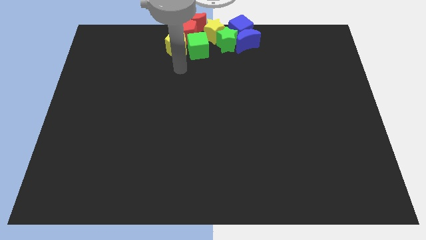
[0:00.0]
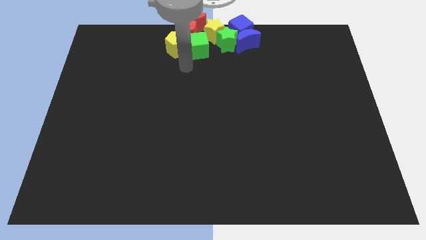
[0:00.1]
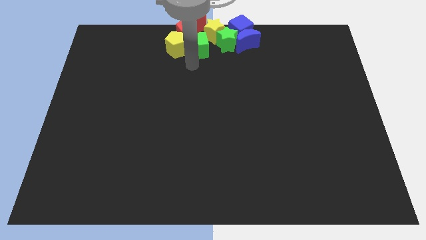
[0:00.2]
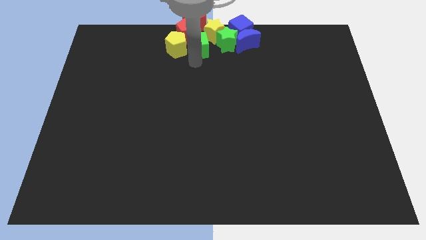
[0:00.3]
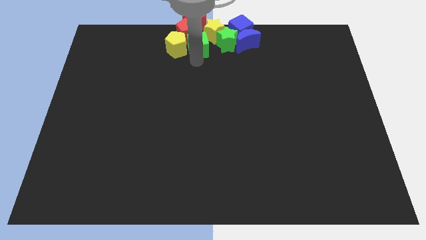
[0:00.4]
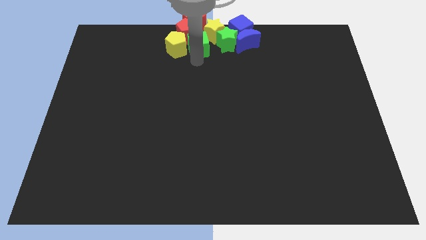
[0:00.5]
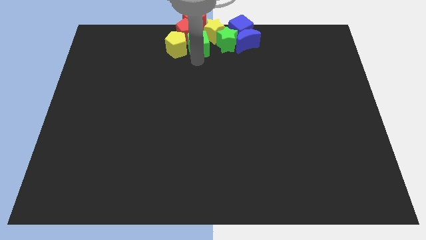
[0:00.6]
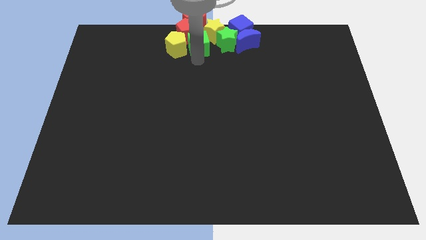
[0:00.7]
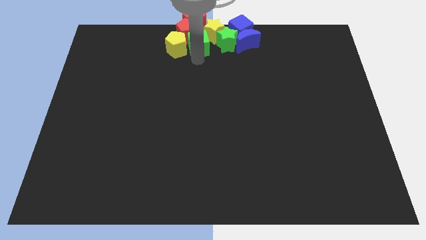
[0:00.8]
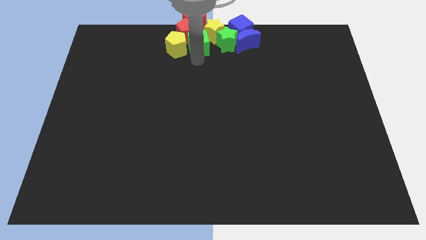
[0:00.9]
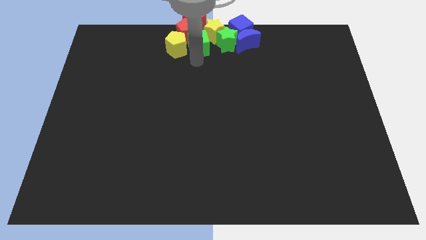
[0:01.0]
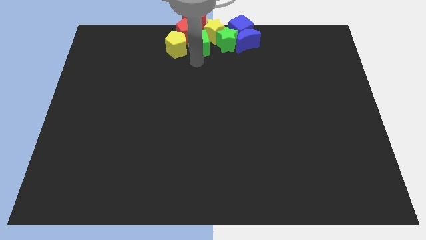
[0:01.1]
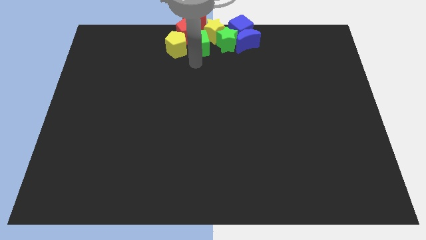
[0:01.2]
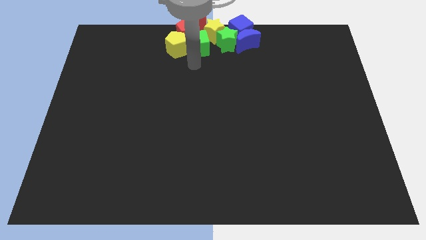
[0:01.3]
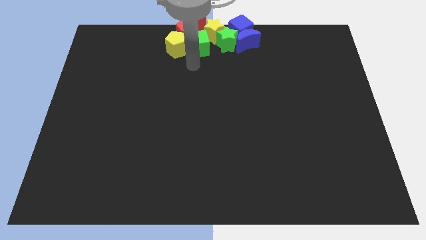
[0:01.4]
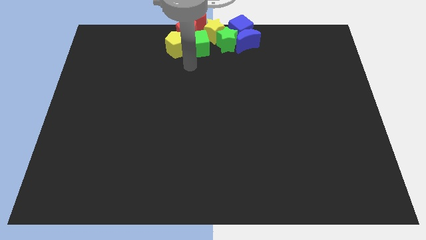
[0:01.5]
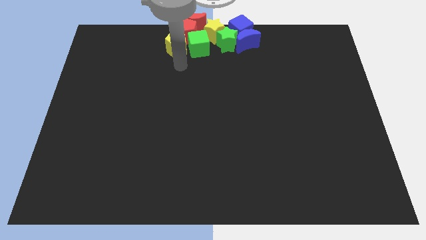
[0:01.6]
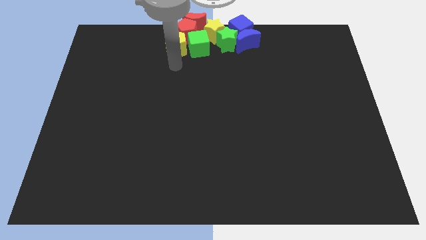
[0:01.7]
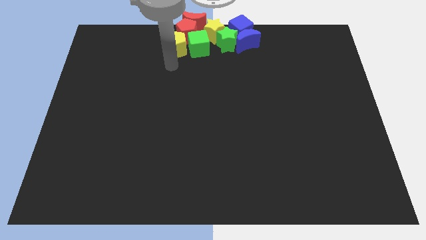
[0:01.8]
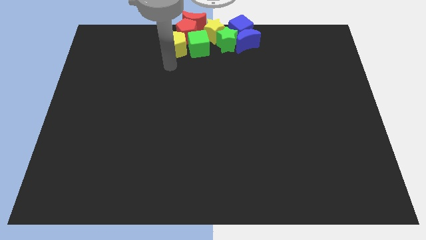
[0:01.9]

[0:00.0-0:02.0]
slide the green cube slightly up

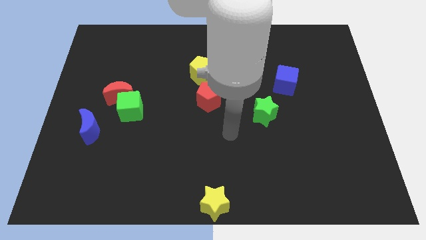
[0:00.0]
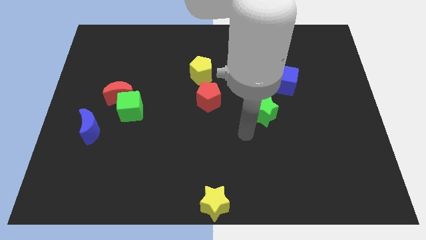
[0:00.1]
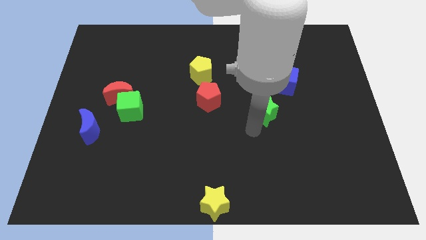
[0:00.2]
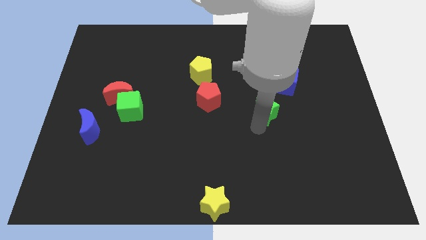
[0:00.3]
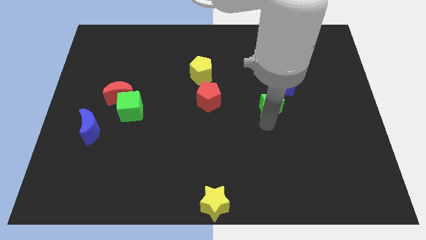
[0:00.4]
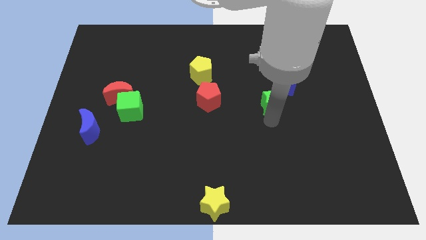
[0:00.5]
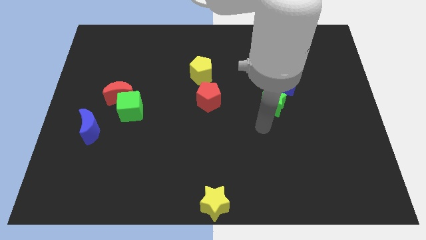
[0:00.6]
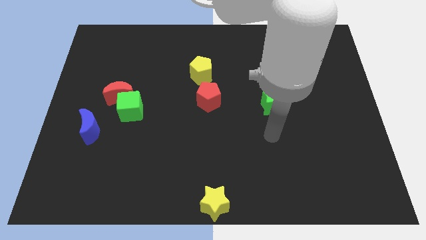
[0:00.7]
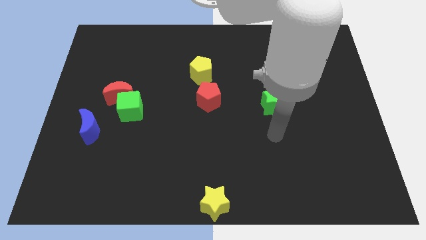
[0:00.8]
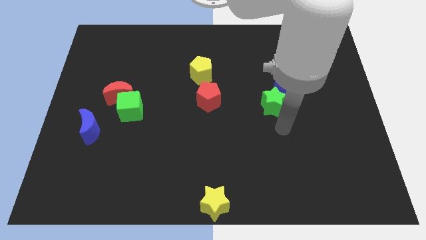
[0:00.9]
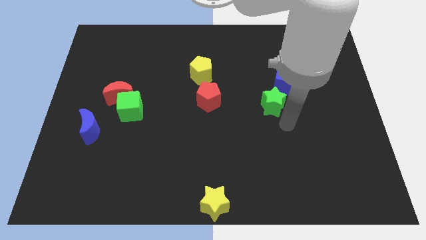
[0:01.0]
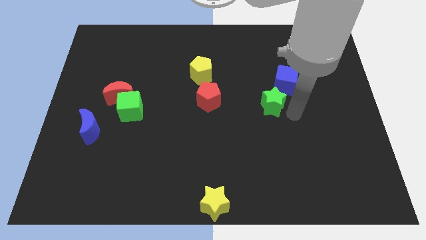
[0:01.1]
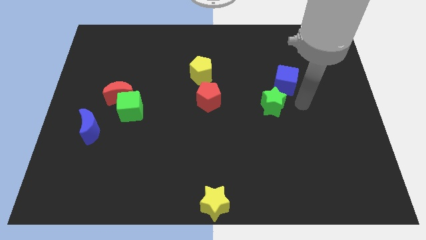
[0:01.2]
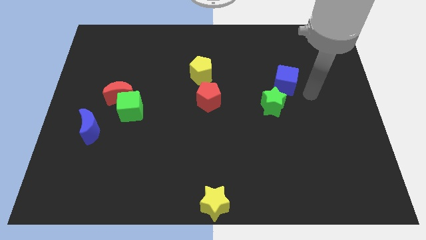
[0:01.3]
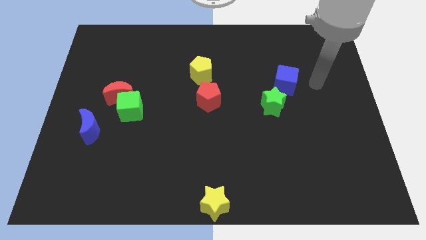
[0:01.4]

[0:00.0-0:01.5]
push green star into the blue cube

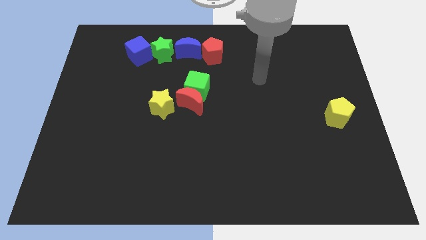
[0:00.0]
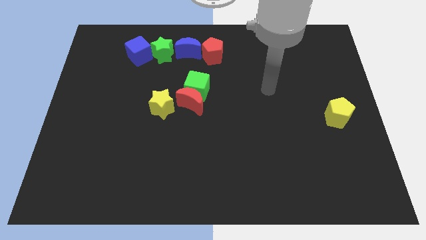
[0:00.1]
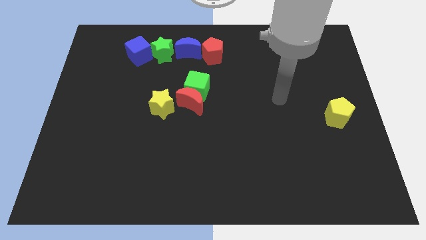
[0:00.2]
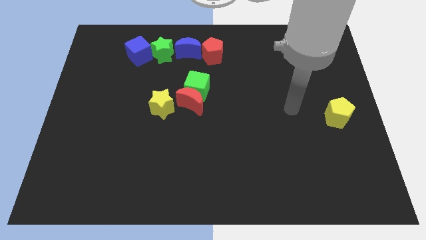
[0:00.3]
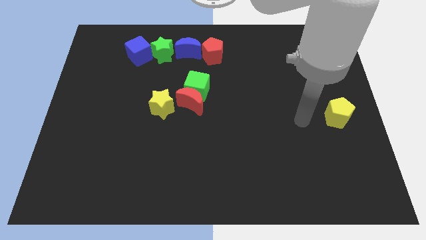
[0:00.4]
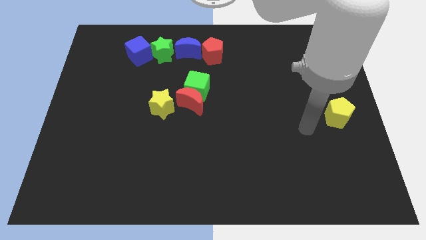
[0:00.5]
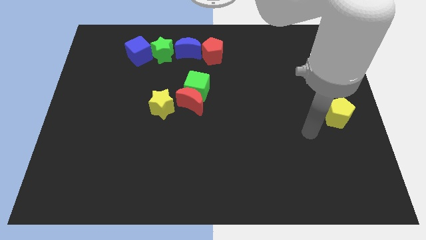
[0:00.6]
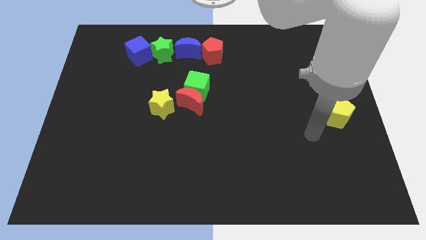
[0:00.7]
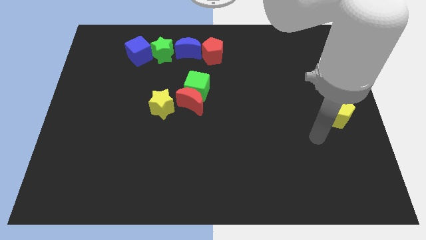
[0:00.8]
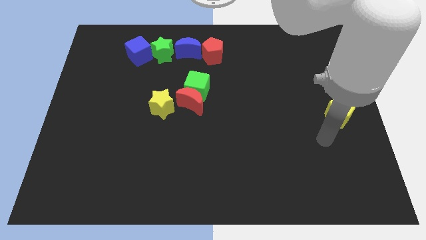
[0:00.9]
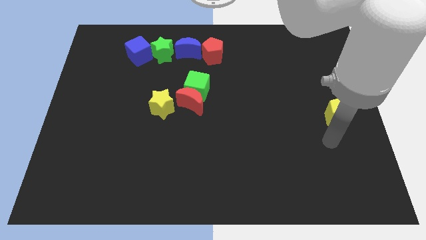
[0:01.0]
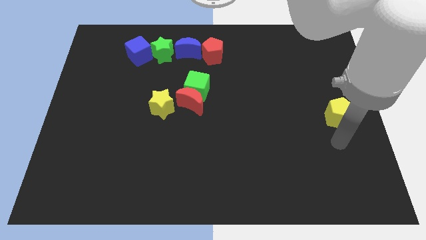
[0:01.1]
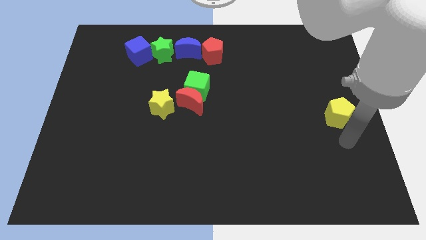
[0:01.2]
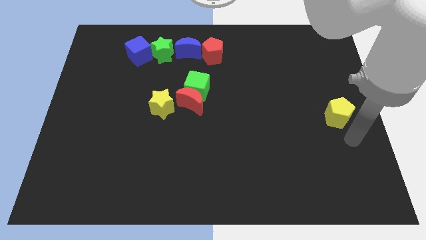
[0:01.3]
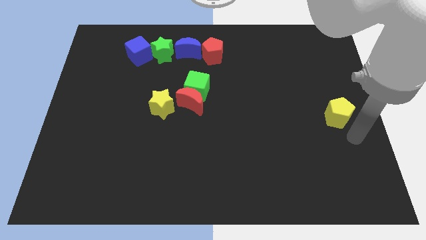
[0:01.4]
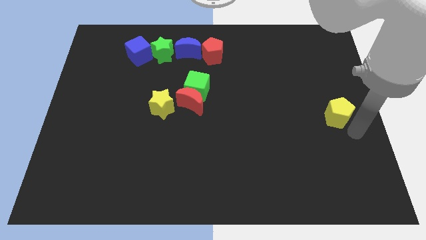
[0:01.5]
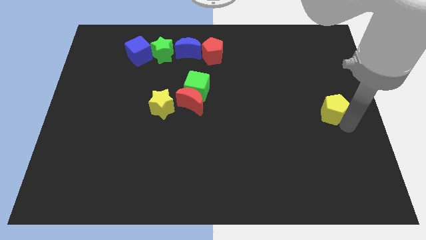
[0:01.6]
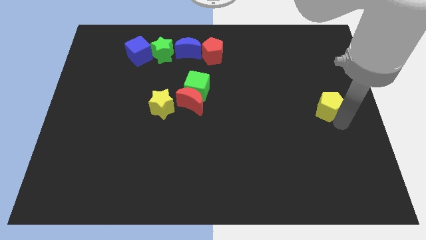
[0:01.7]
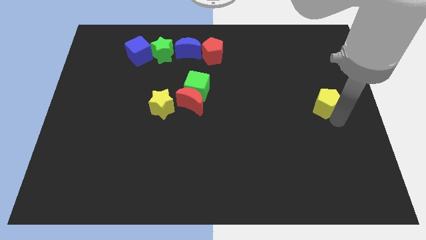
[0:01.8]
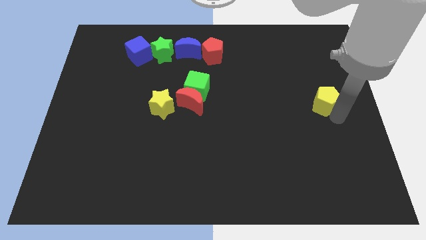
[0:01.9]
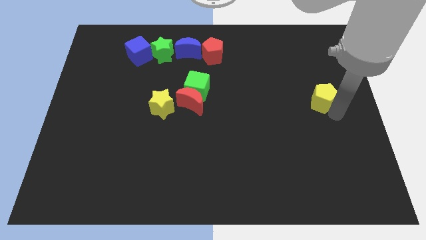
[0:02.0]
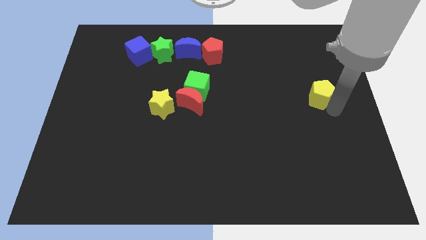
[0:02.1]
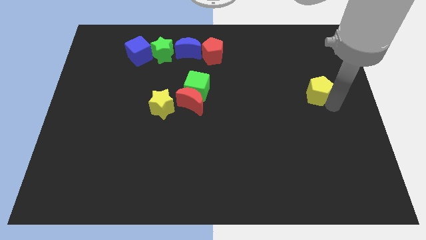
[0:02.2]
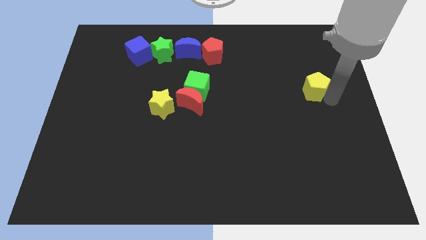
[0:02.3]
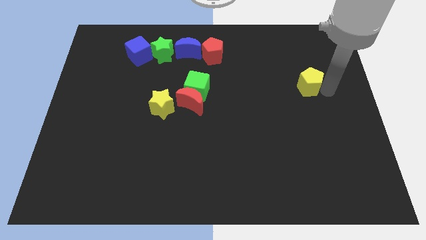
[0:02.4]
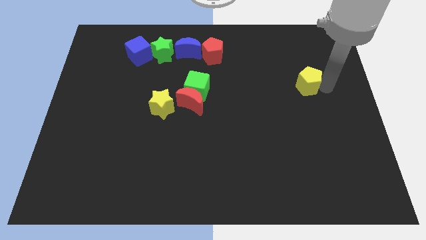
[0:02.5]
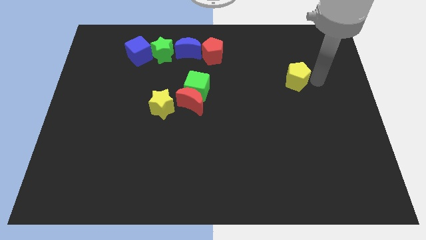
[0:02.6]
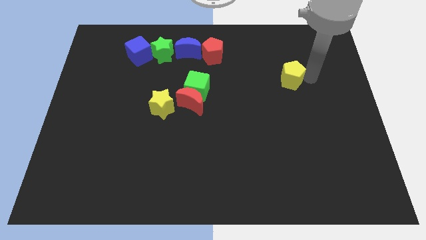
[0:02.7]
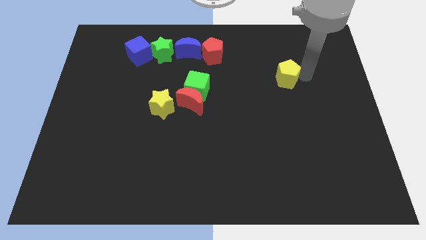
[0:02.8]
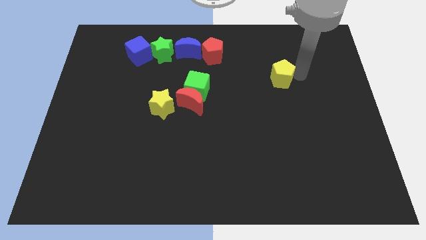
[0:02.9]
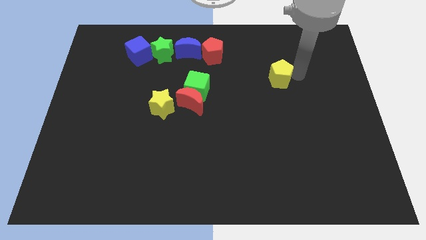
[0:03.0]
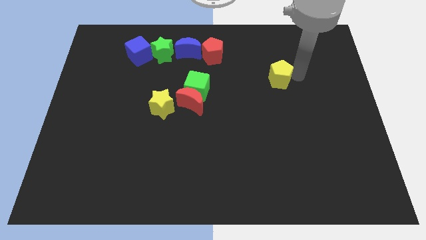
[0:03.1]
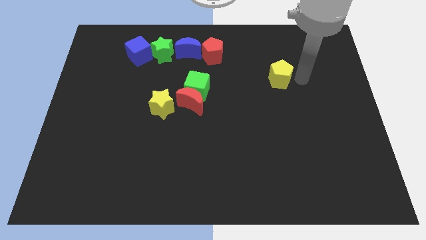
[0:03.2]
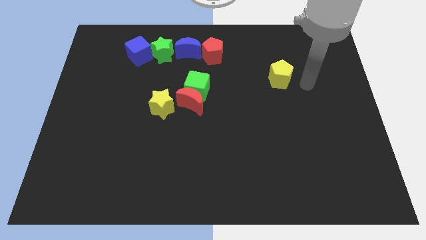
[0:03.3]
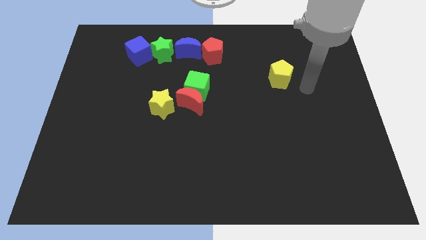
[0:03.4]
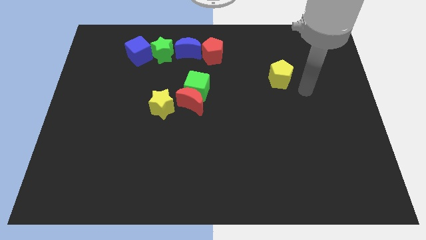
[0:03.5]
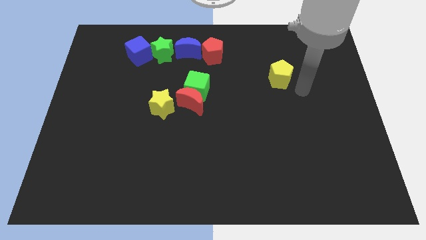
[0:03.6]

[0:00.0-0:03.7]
move yellow pentagon parallel to the bottom right to the red pentagon

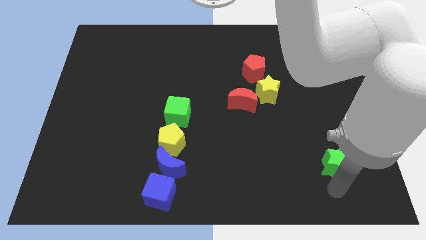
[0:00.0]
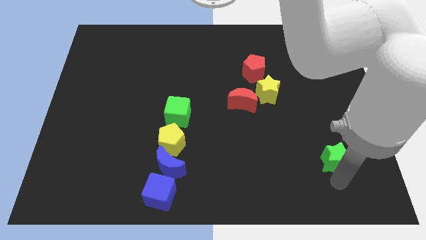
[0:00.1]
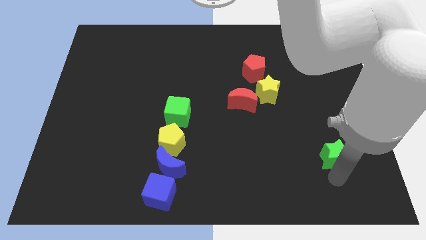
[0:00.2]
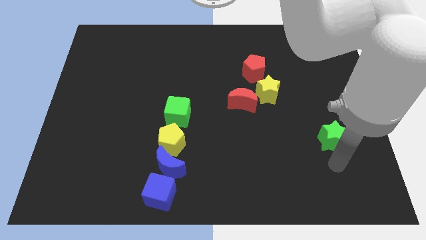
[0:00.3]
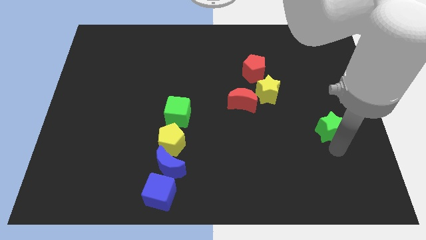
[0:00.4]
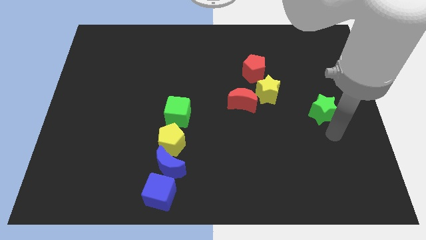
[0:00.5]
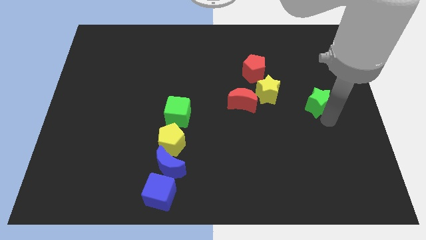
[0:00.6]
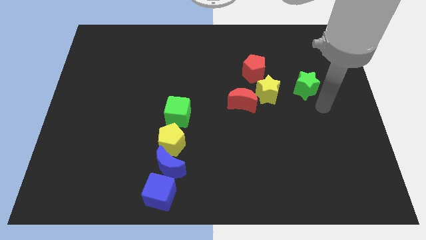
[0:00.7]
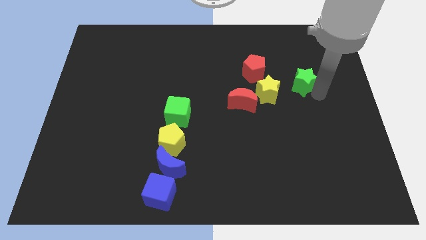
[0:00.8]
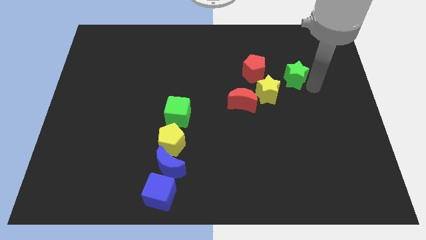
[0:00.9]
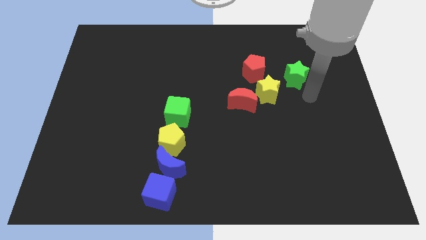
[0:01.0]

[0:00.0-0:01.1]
push the green star to the top right side of the yellow star

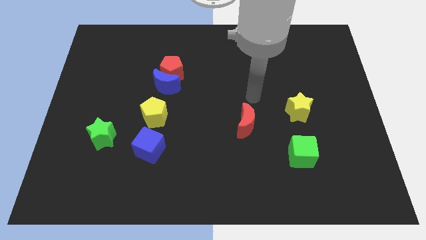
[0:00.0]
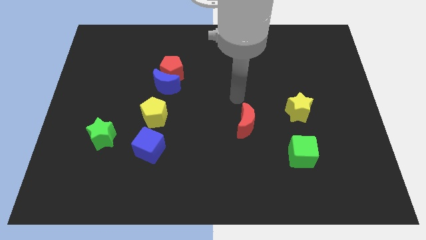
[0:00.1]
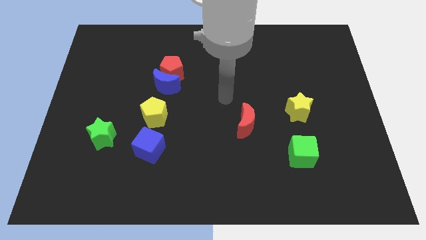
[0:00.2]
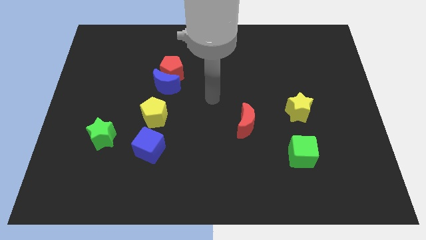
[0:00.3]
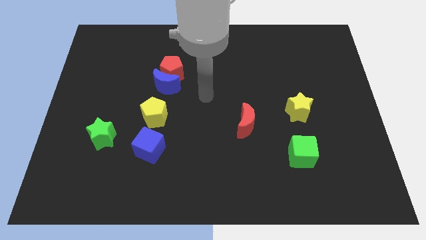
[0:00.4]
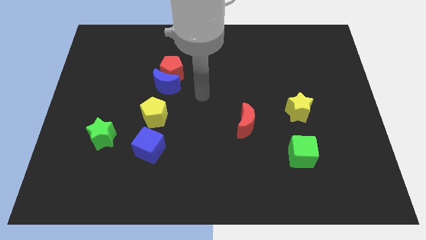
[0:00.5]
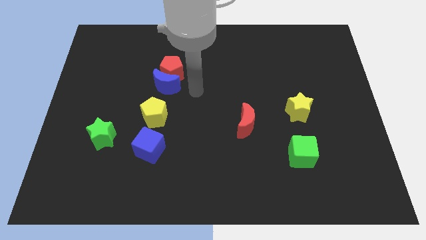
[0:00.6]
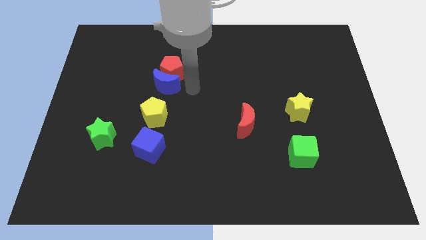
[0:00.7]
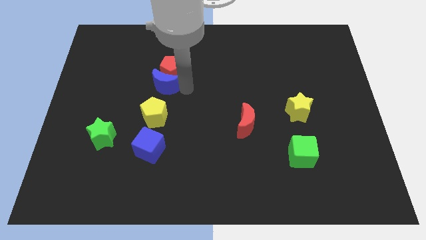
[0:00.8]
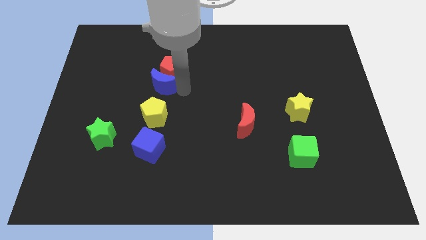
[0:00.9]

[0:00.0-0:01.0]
tap the right side of the blue crescent
